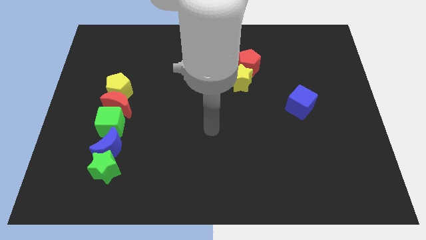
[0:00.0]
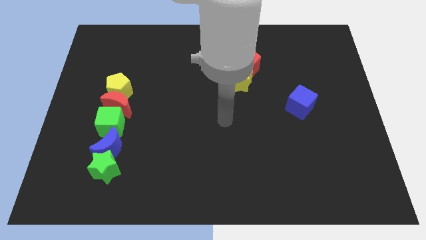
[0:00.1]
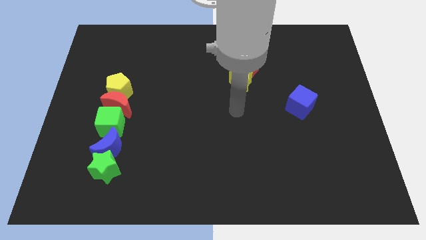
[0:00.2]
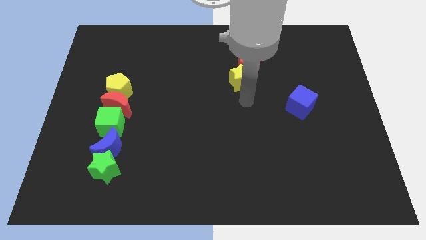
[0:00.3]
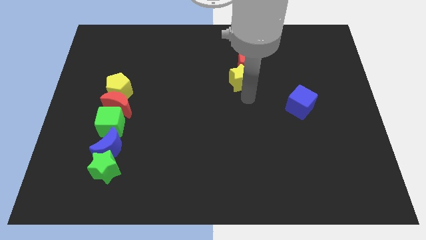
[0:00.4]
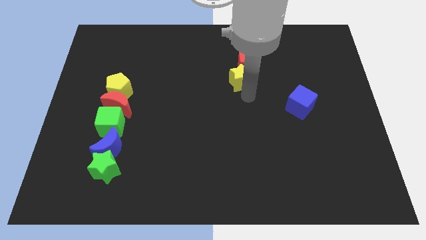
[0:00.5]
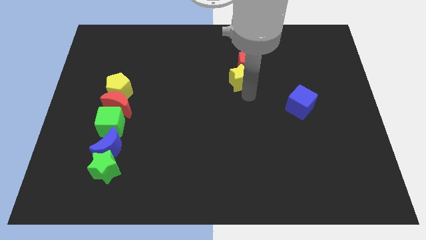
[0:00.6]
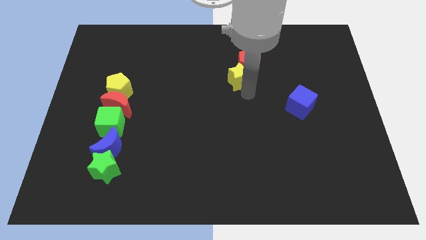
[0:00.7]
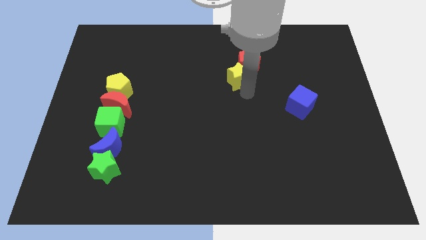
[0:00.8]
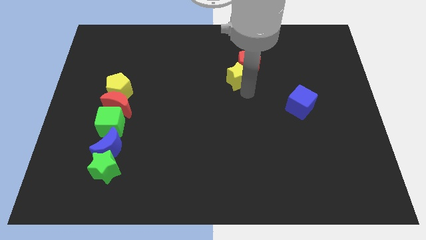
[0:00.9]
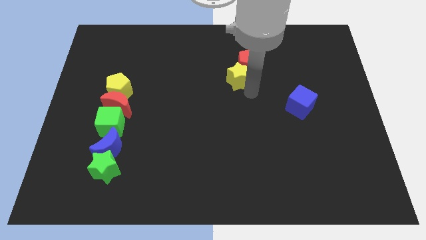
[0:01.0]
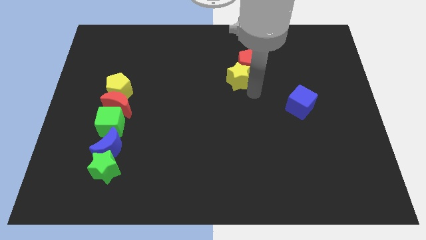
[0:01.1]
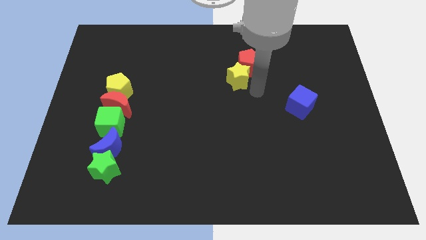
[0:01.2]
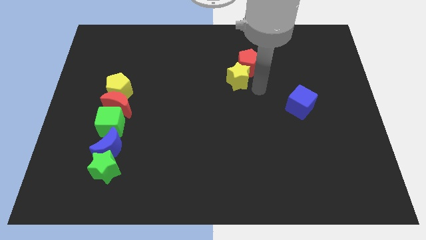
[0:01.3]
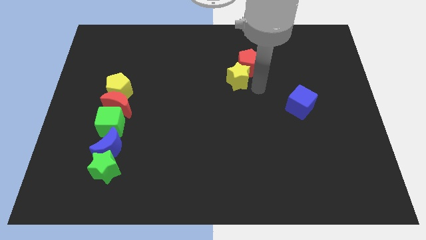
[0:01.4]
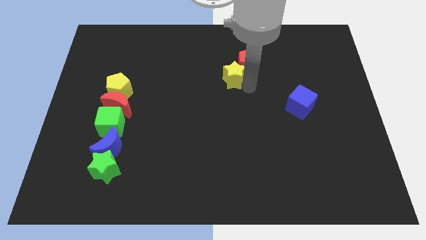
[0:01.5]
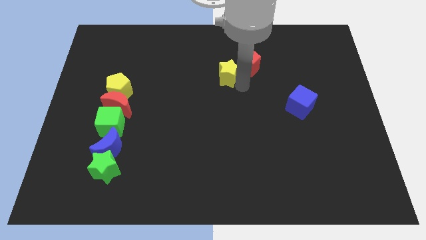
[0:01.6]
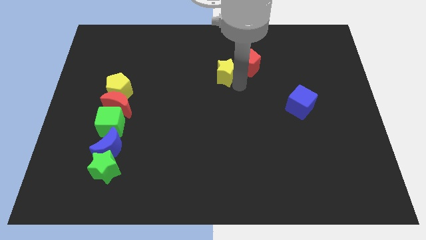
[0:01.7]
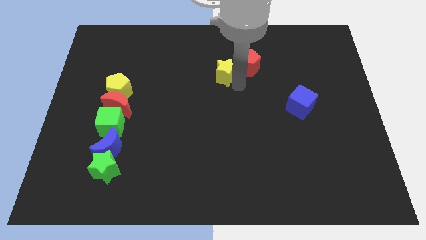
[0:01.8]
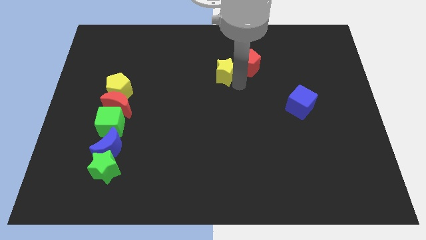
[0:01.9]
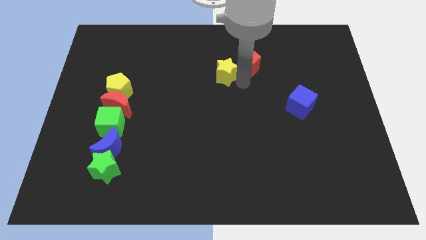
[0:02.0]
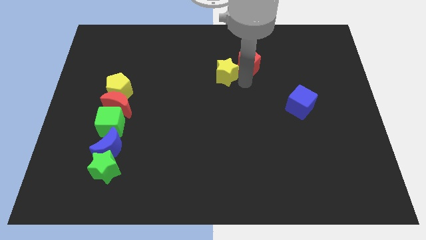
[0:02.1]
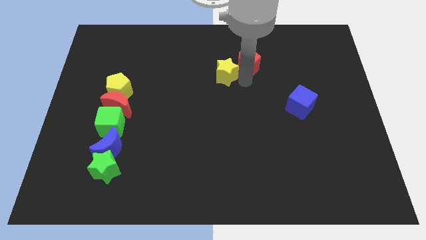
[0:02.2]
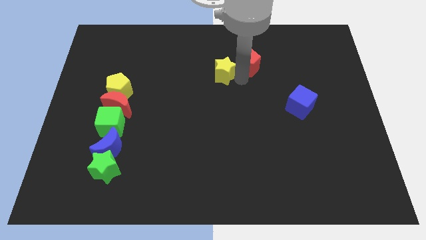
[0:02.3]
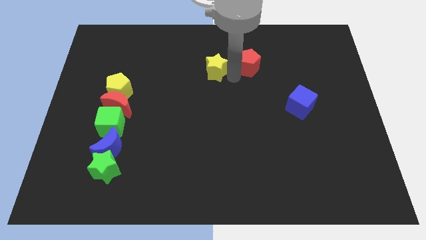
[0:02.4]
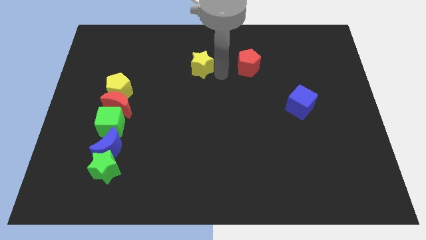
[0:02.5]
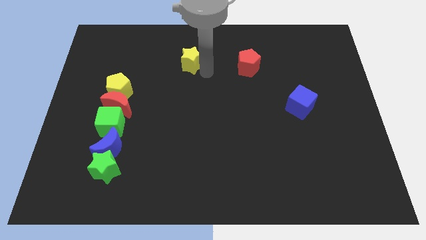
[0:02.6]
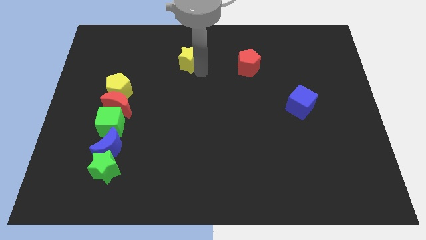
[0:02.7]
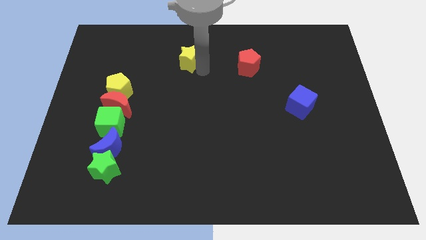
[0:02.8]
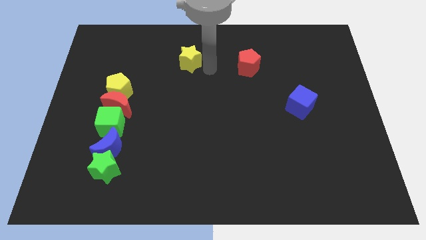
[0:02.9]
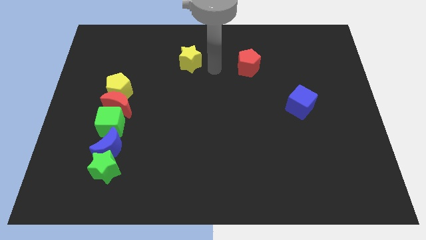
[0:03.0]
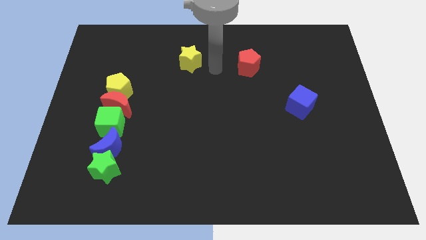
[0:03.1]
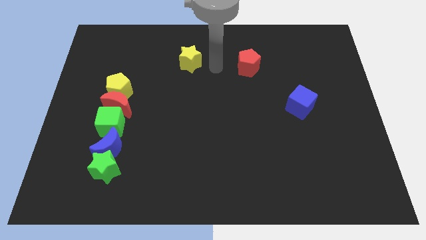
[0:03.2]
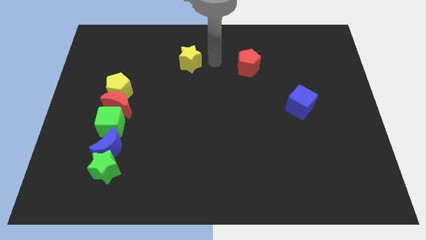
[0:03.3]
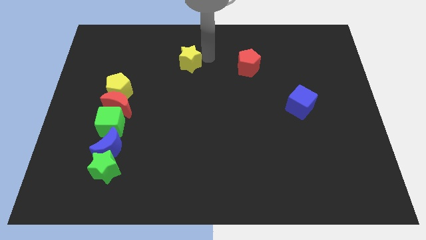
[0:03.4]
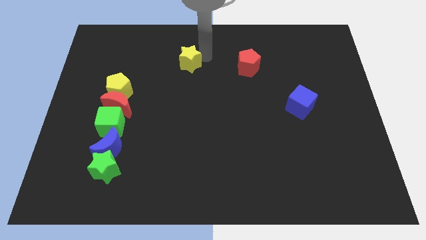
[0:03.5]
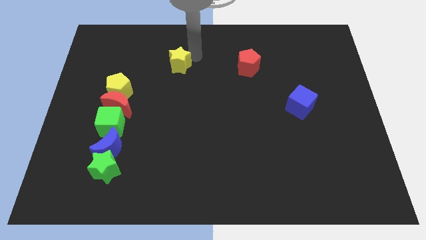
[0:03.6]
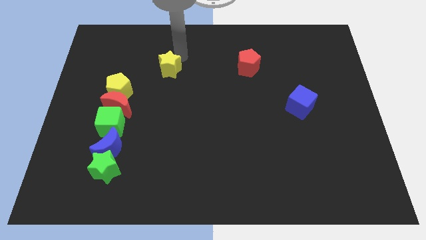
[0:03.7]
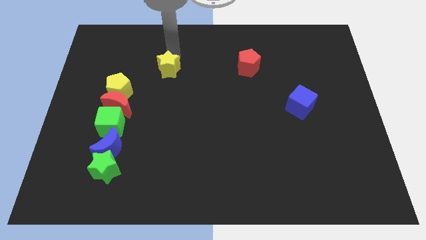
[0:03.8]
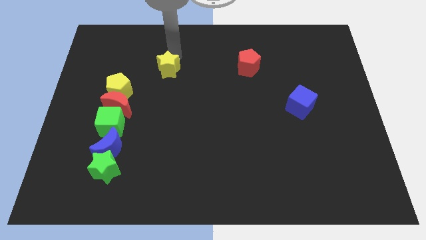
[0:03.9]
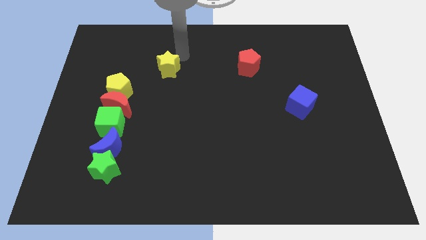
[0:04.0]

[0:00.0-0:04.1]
separate yellow star from red pentagon

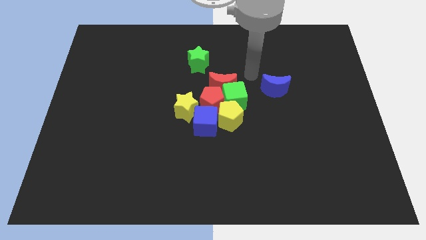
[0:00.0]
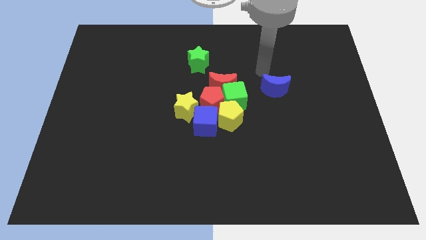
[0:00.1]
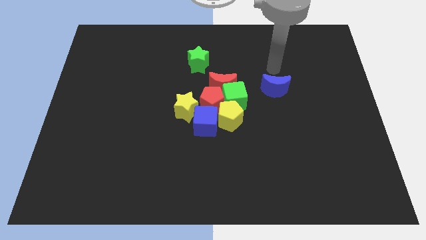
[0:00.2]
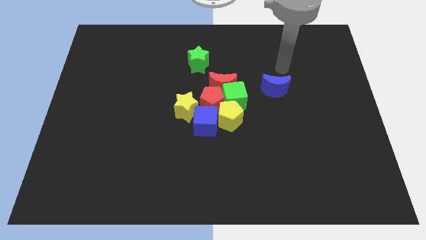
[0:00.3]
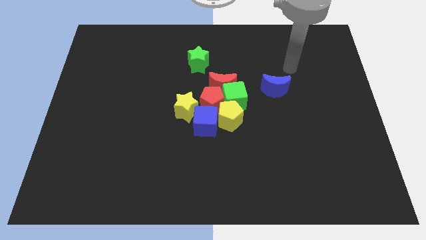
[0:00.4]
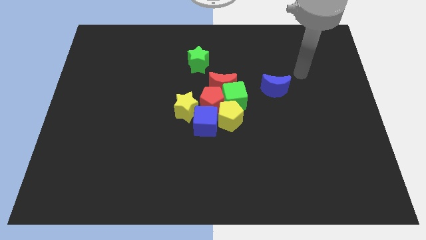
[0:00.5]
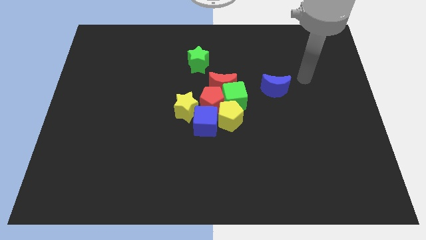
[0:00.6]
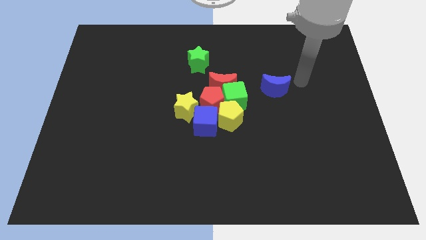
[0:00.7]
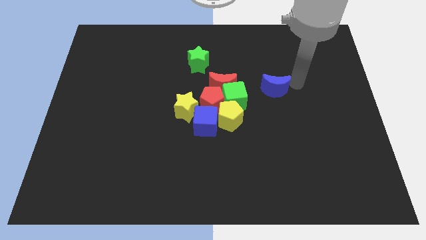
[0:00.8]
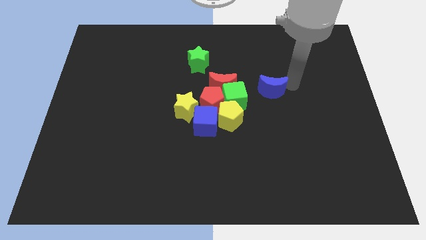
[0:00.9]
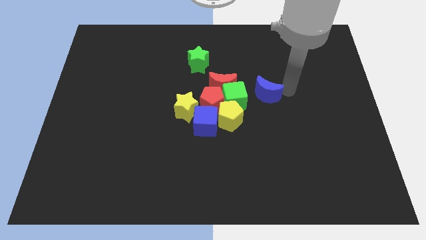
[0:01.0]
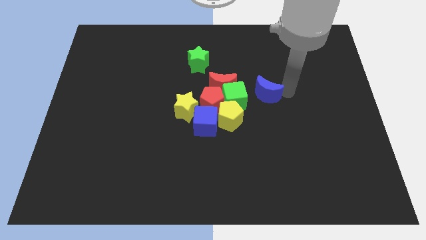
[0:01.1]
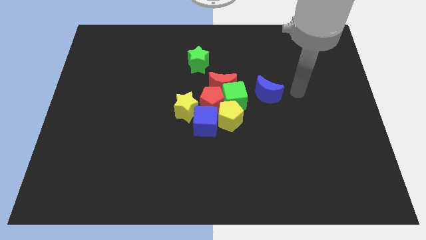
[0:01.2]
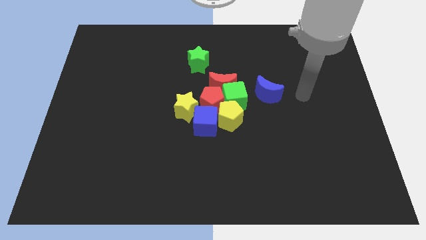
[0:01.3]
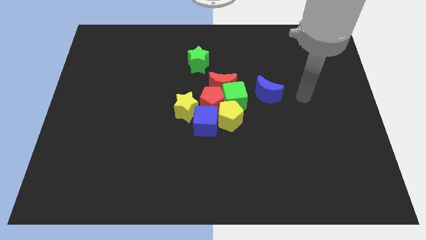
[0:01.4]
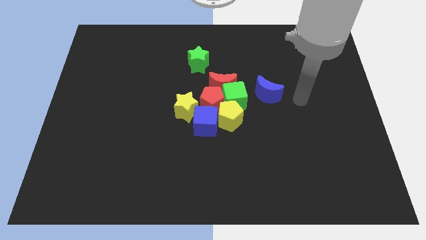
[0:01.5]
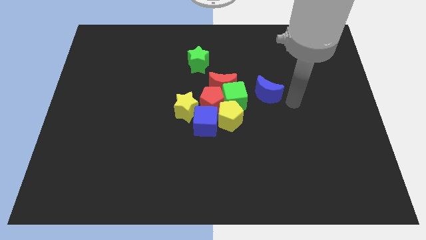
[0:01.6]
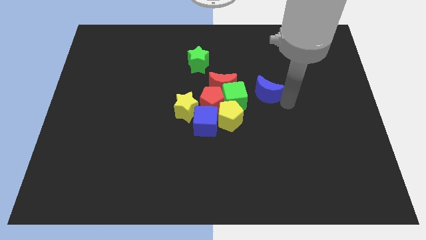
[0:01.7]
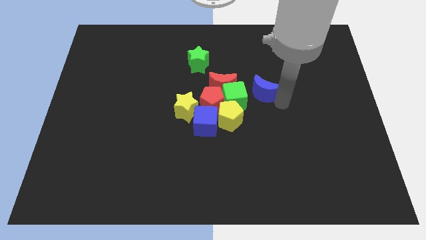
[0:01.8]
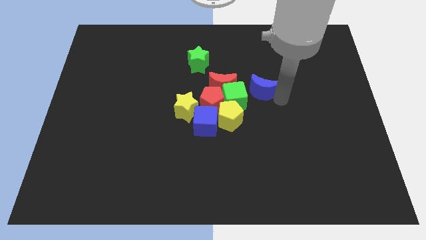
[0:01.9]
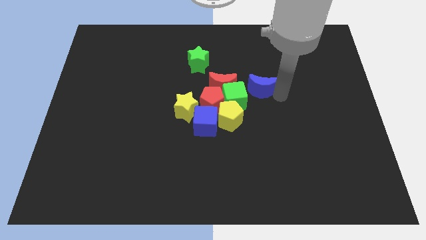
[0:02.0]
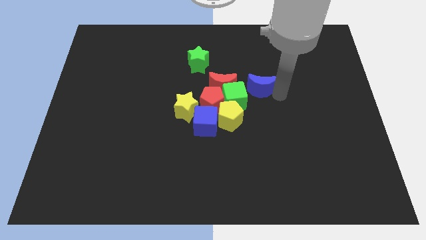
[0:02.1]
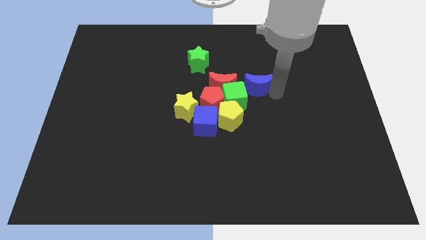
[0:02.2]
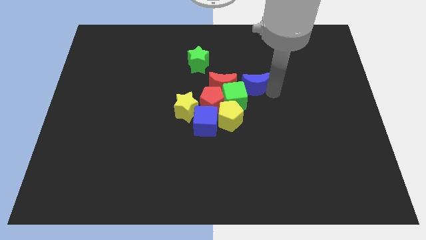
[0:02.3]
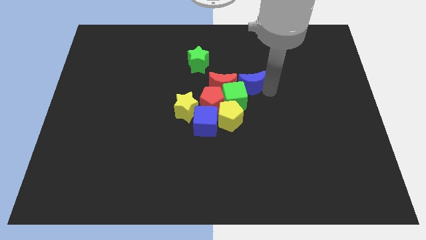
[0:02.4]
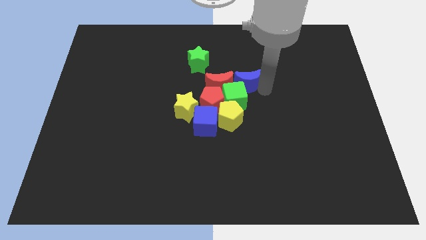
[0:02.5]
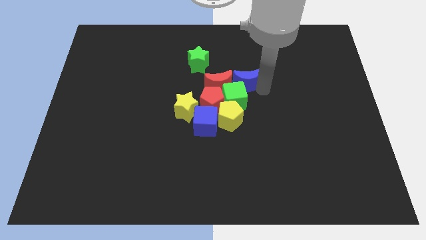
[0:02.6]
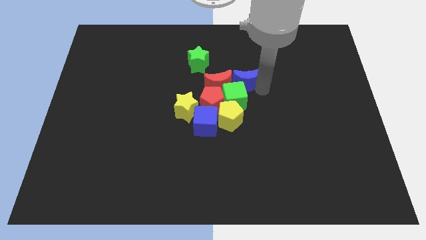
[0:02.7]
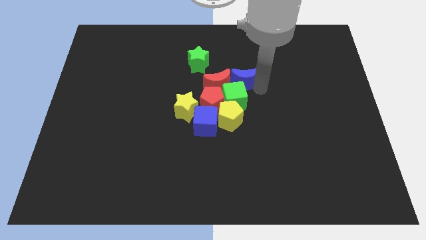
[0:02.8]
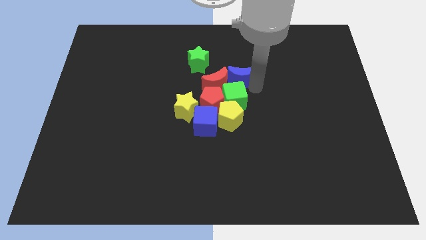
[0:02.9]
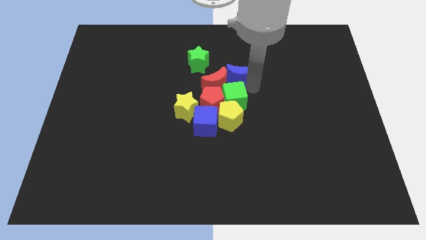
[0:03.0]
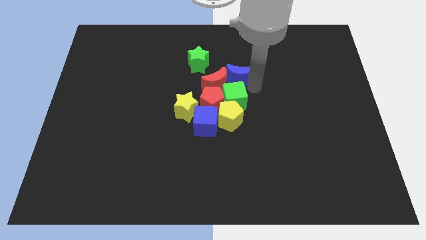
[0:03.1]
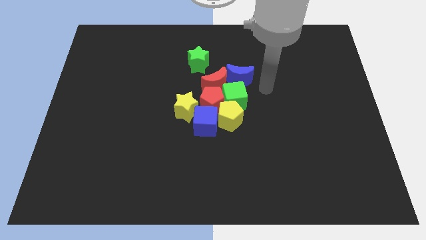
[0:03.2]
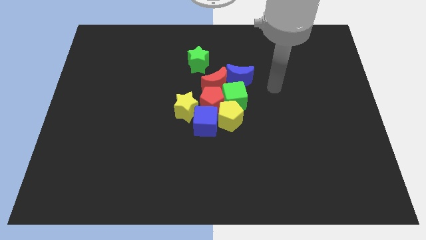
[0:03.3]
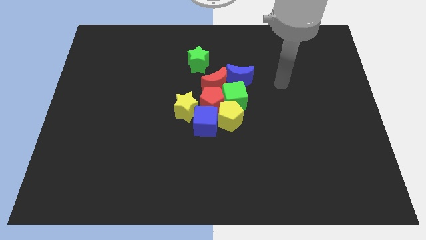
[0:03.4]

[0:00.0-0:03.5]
push the blue crescent to the right of the red crescent

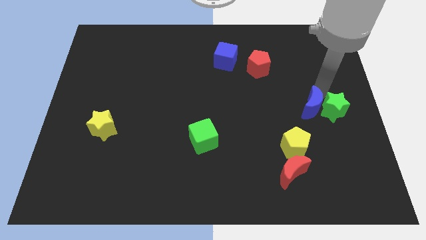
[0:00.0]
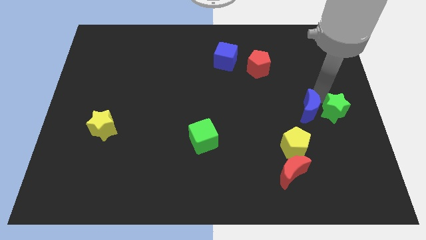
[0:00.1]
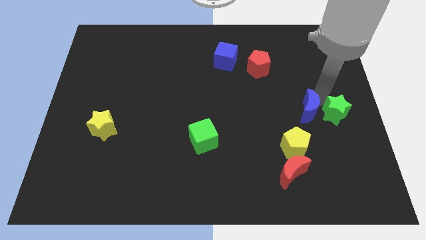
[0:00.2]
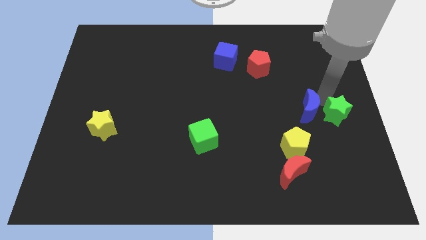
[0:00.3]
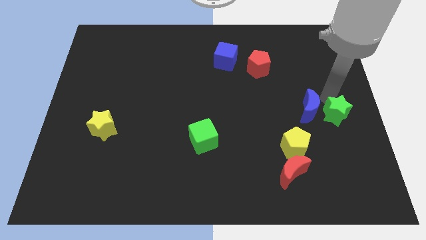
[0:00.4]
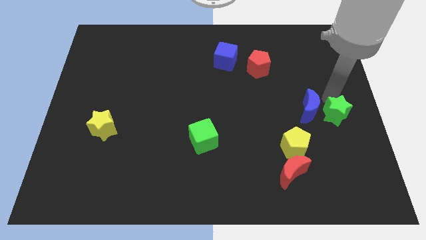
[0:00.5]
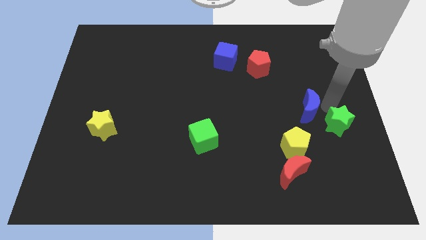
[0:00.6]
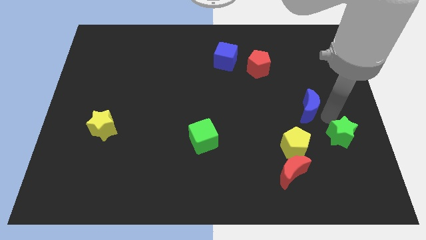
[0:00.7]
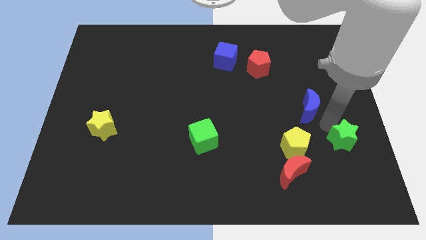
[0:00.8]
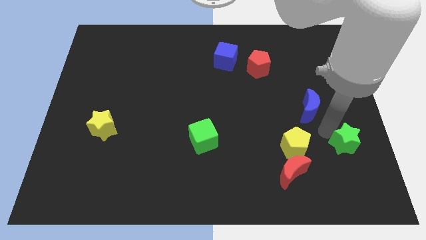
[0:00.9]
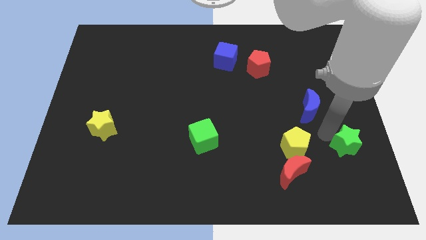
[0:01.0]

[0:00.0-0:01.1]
separate green star from blue moon

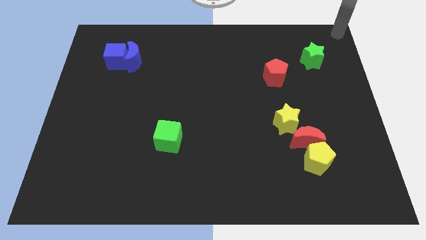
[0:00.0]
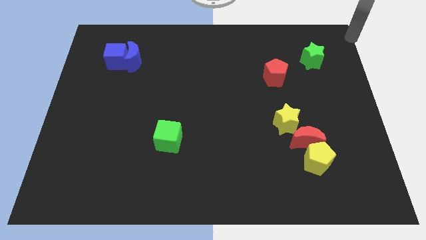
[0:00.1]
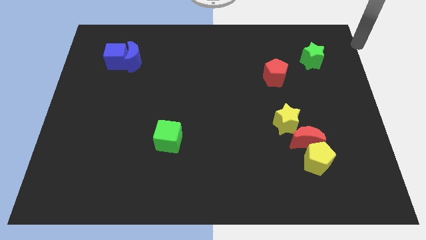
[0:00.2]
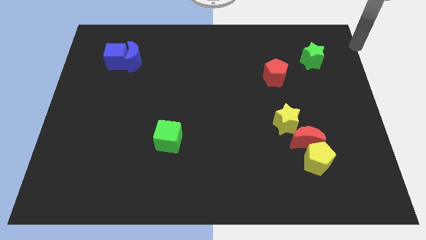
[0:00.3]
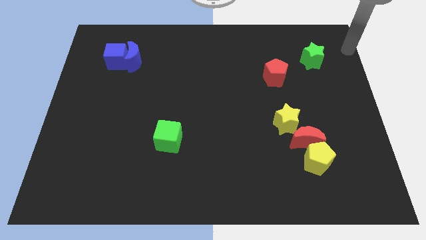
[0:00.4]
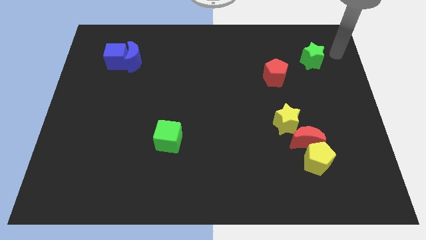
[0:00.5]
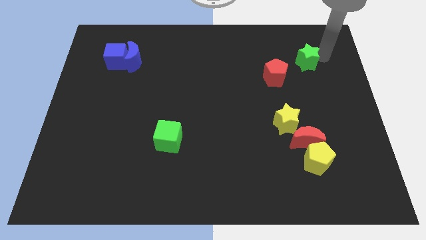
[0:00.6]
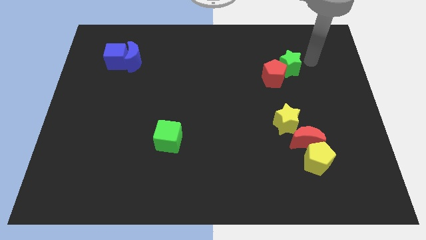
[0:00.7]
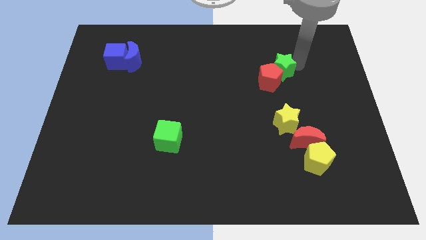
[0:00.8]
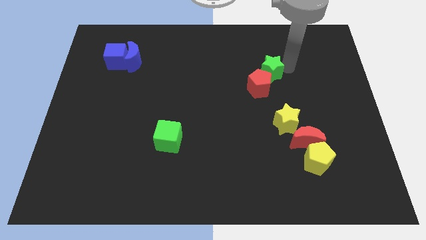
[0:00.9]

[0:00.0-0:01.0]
push green star into red pentagon
